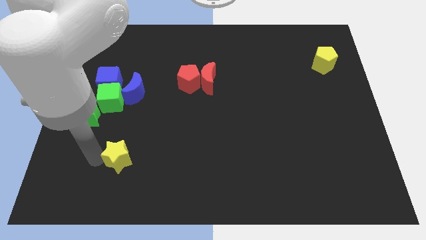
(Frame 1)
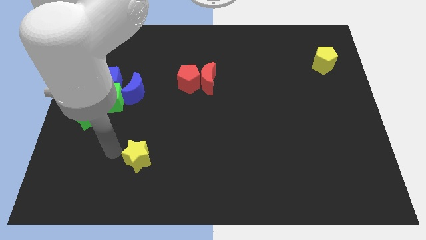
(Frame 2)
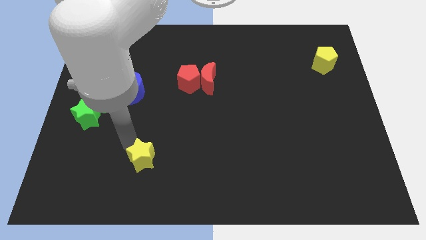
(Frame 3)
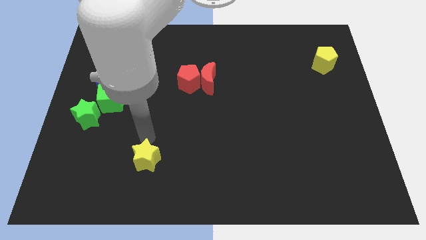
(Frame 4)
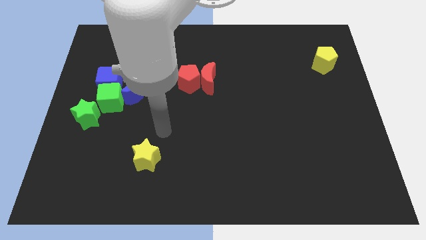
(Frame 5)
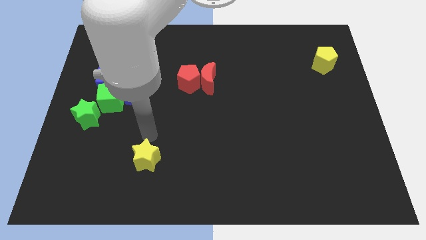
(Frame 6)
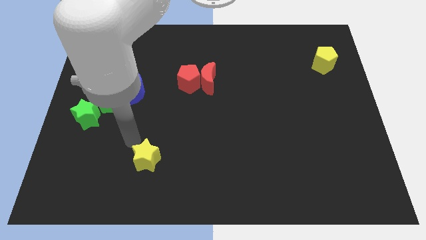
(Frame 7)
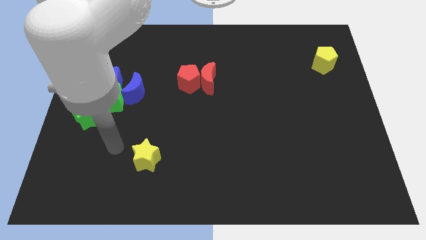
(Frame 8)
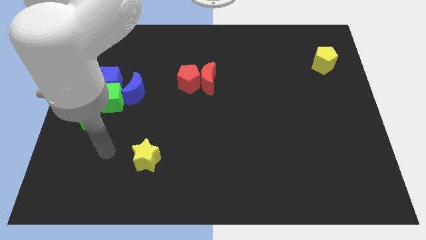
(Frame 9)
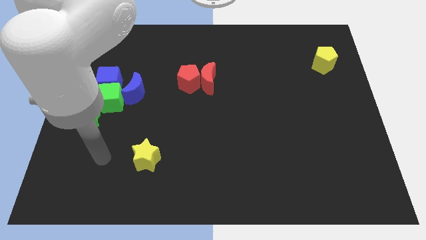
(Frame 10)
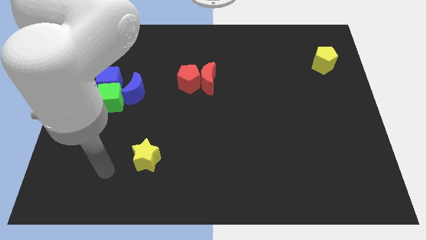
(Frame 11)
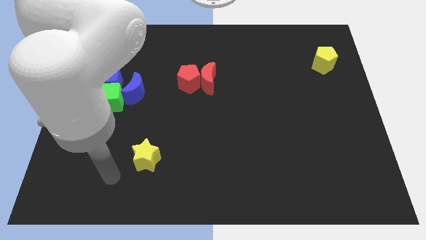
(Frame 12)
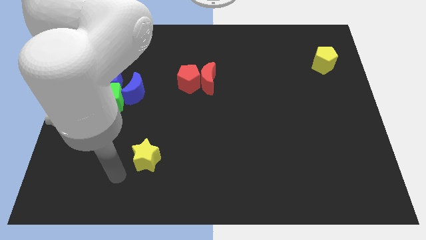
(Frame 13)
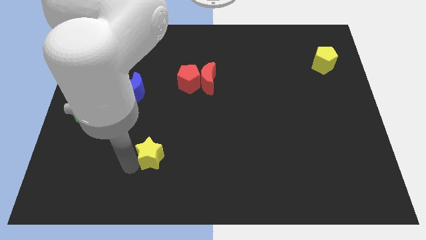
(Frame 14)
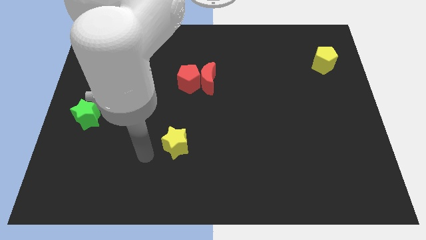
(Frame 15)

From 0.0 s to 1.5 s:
move the yellow star diagonally bottom right to the blue moon

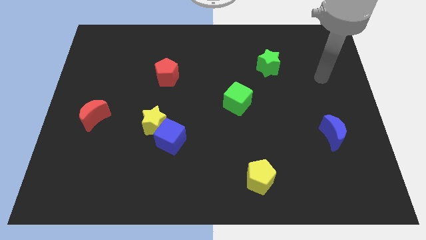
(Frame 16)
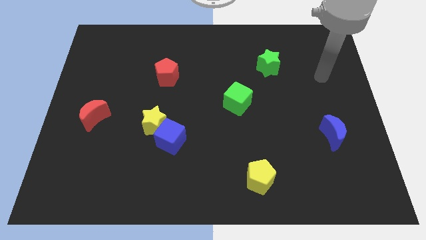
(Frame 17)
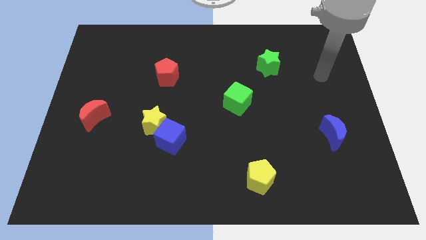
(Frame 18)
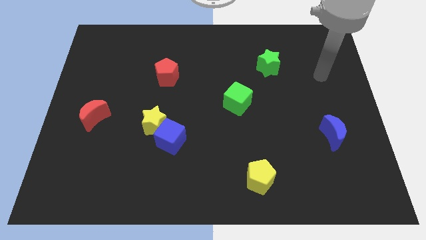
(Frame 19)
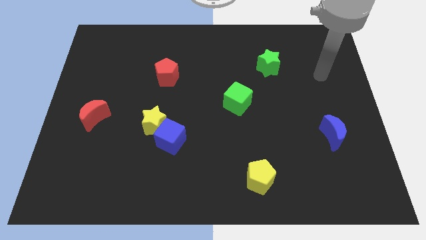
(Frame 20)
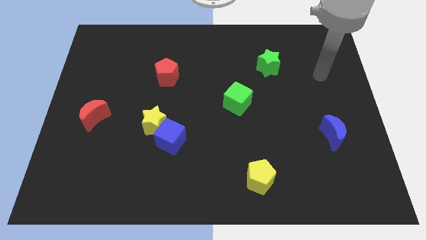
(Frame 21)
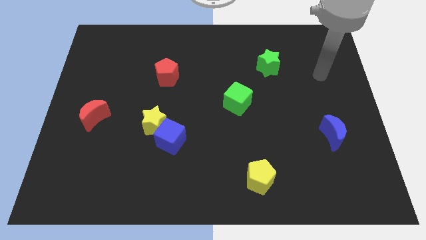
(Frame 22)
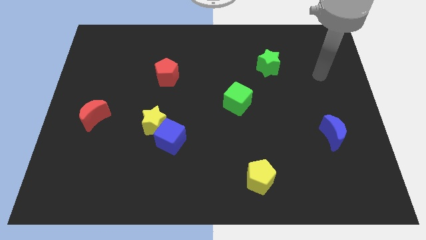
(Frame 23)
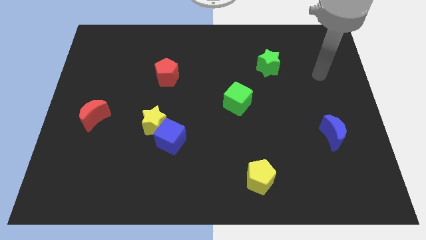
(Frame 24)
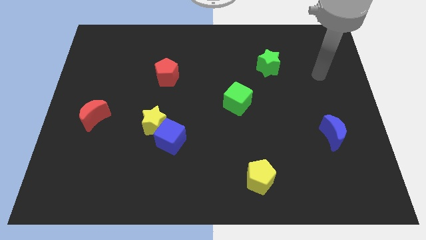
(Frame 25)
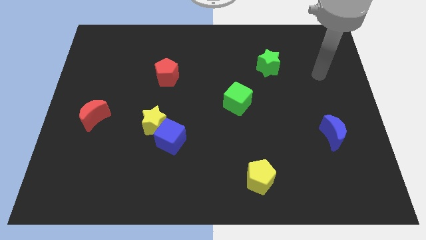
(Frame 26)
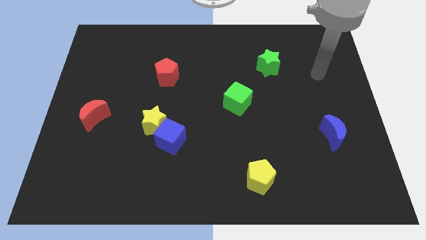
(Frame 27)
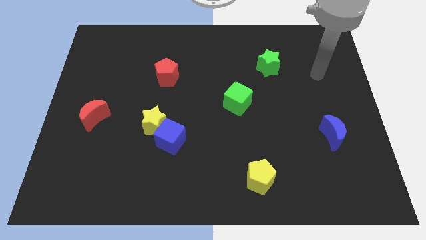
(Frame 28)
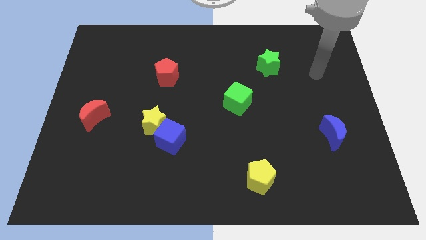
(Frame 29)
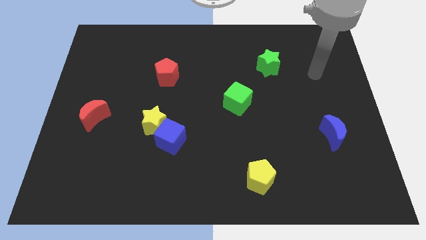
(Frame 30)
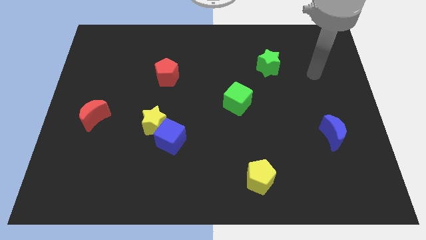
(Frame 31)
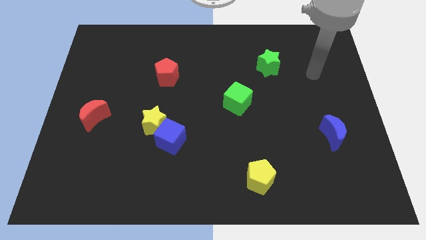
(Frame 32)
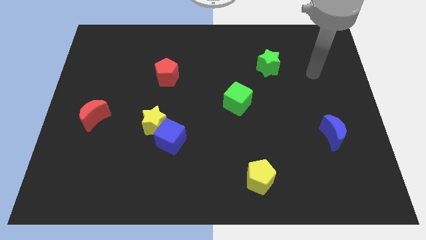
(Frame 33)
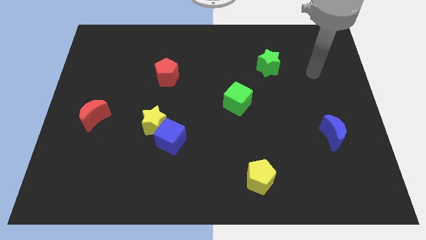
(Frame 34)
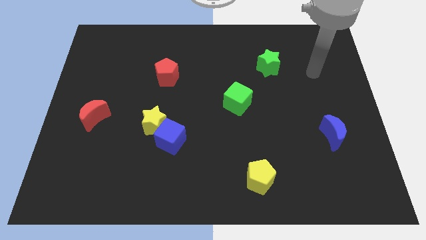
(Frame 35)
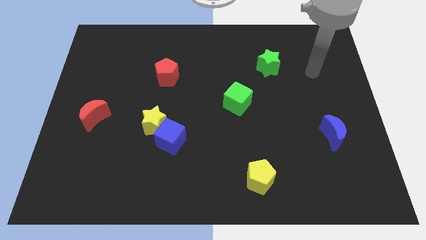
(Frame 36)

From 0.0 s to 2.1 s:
move your arm slightly to the top side of the board

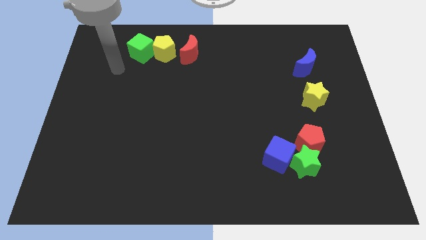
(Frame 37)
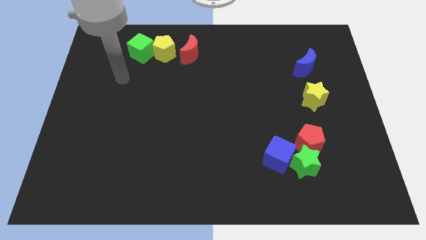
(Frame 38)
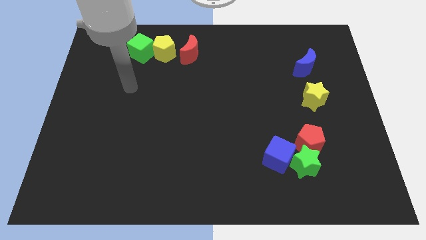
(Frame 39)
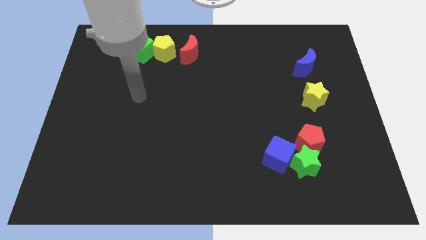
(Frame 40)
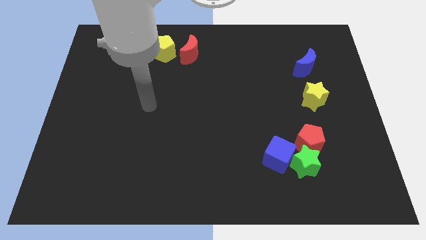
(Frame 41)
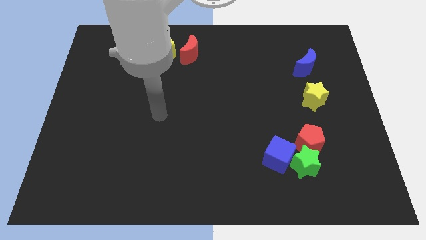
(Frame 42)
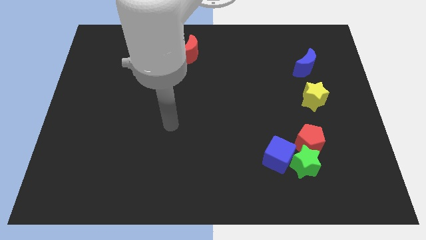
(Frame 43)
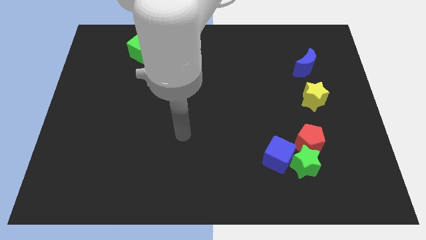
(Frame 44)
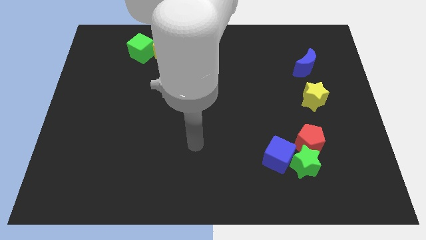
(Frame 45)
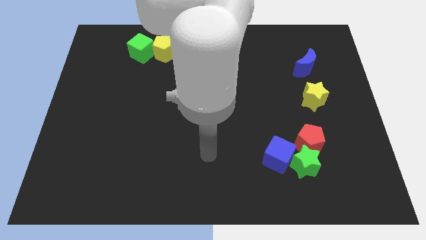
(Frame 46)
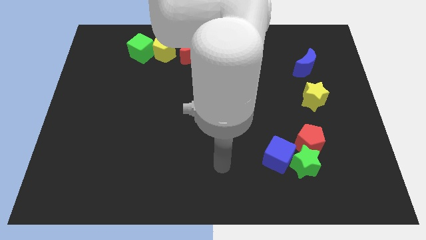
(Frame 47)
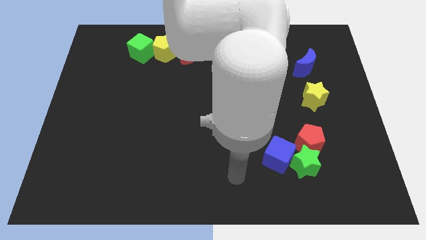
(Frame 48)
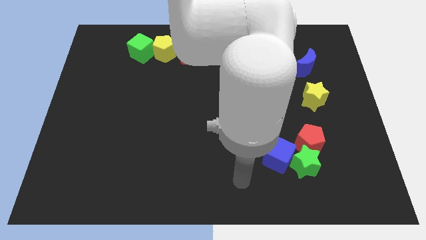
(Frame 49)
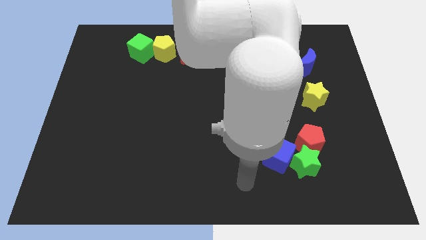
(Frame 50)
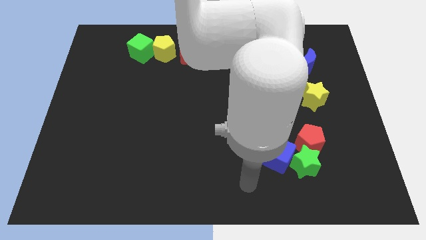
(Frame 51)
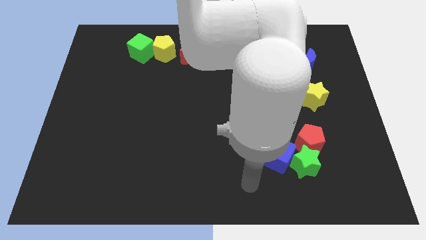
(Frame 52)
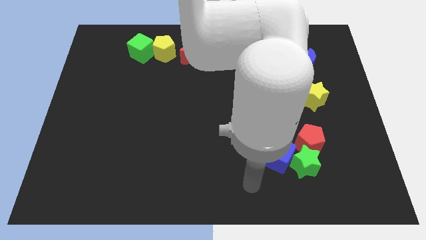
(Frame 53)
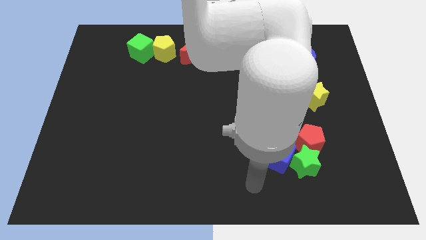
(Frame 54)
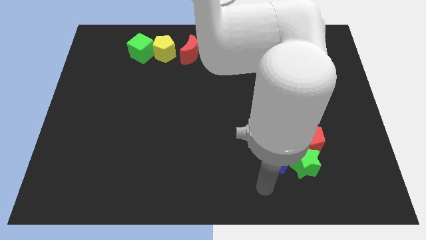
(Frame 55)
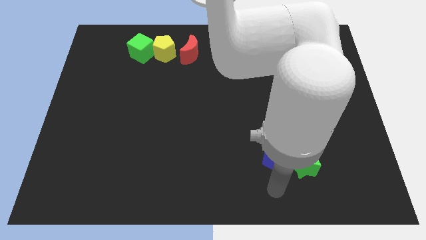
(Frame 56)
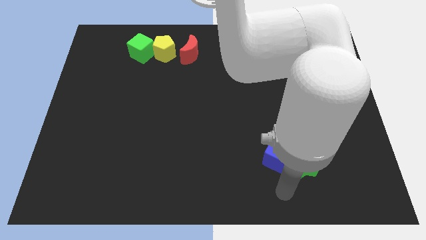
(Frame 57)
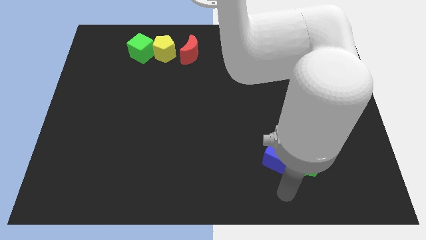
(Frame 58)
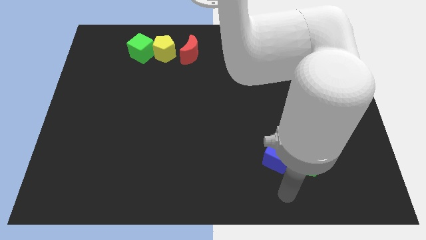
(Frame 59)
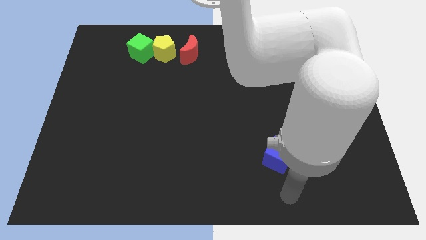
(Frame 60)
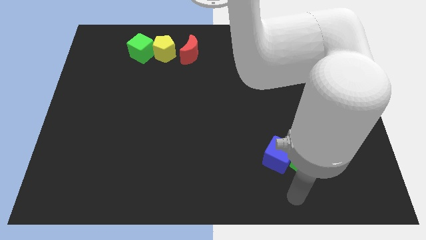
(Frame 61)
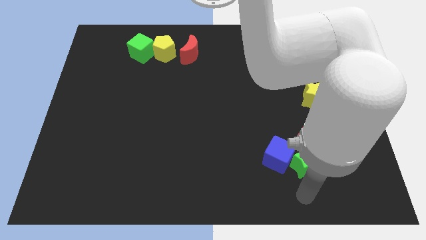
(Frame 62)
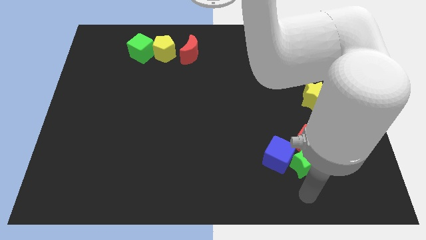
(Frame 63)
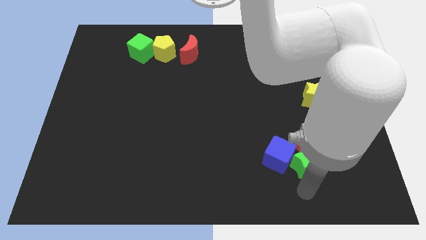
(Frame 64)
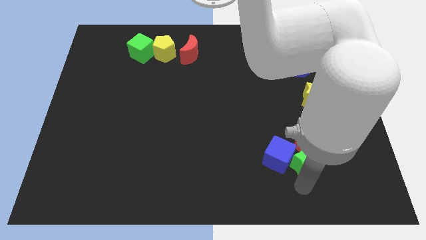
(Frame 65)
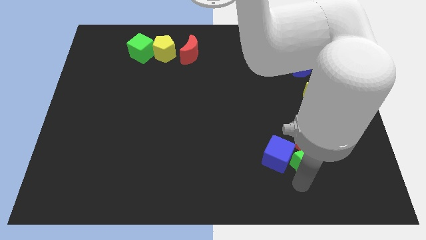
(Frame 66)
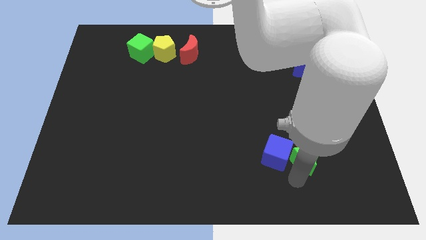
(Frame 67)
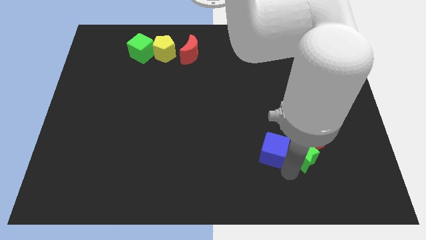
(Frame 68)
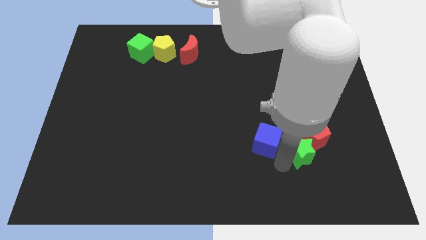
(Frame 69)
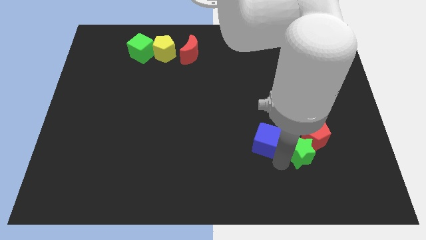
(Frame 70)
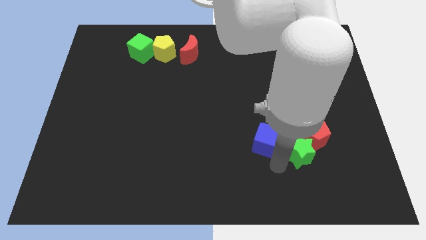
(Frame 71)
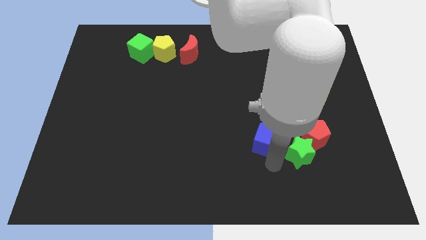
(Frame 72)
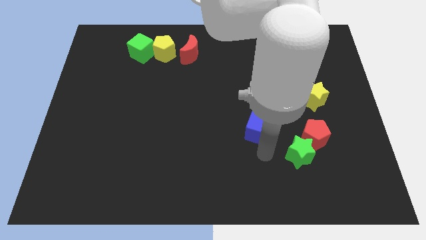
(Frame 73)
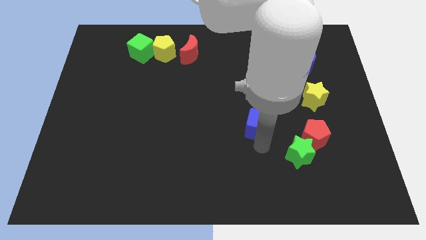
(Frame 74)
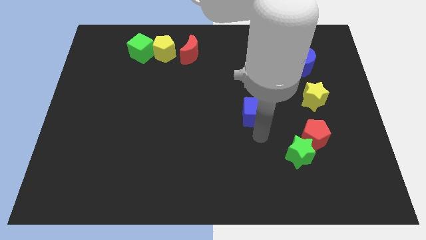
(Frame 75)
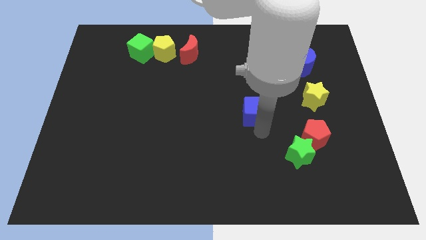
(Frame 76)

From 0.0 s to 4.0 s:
separate the blue cube and the green star

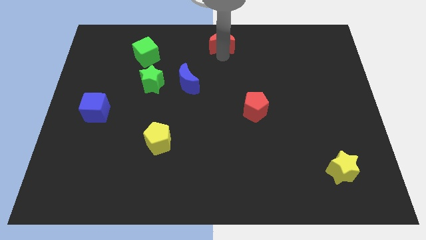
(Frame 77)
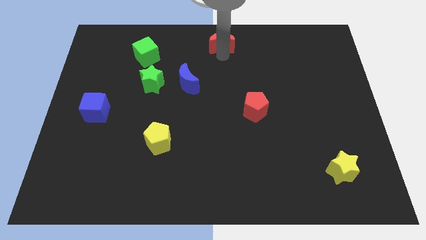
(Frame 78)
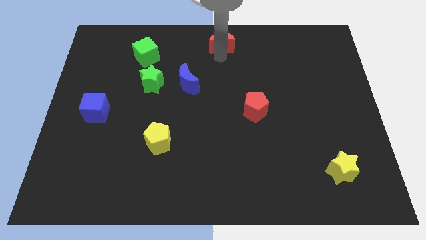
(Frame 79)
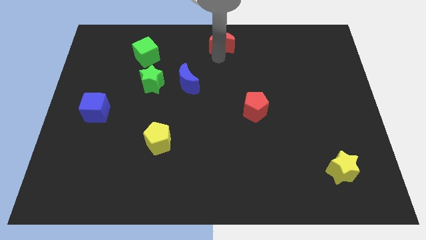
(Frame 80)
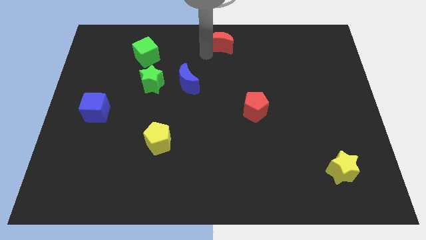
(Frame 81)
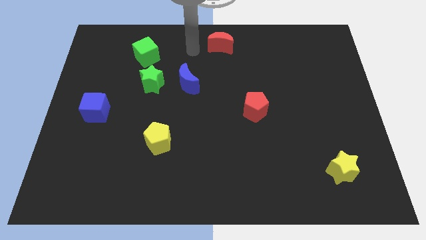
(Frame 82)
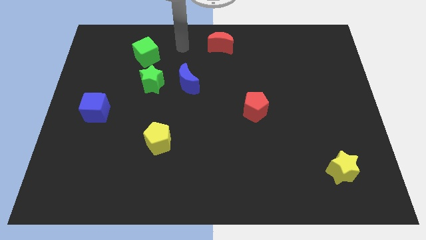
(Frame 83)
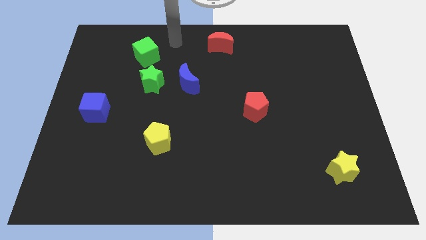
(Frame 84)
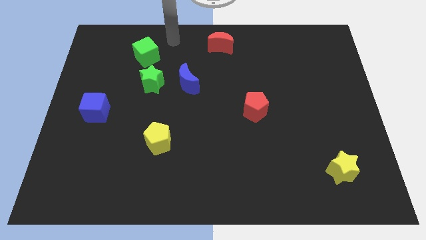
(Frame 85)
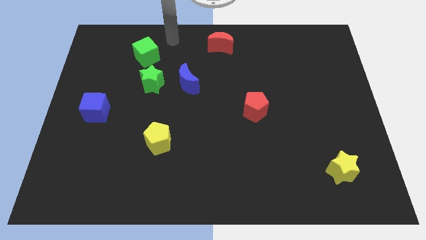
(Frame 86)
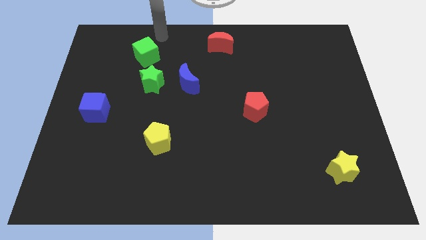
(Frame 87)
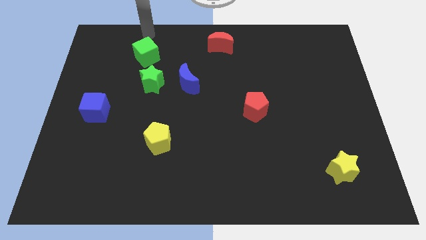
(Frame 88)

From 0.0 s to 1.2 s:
push your arm above the green cube
